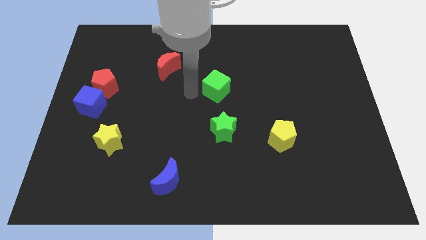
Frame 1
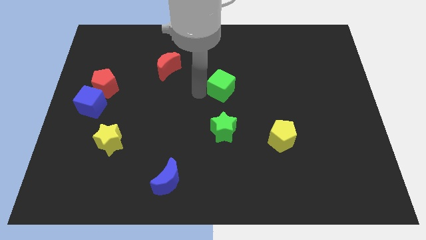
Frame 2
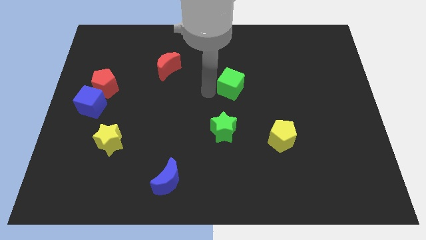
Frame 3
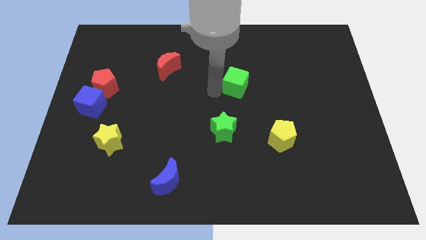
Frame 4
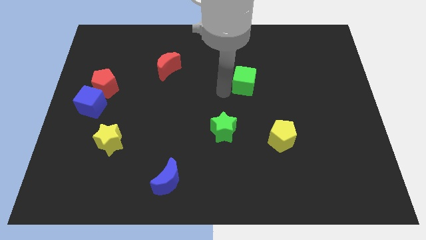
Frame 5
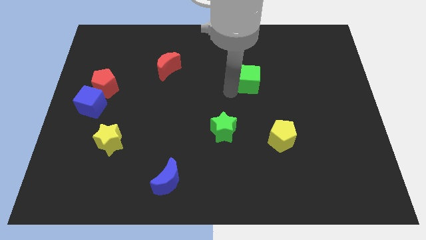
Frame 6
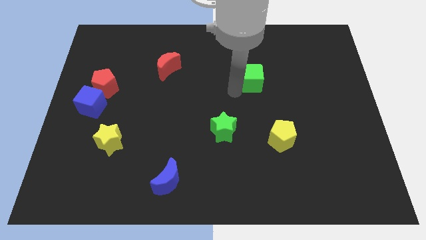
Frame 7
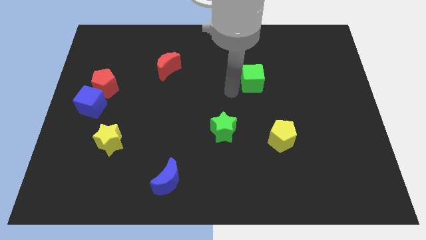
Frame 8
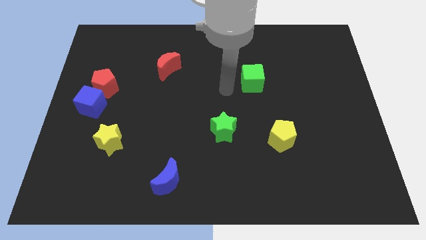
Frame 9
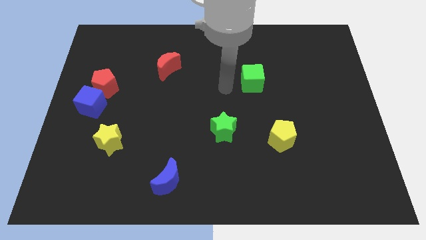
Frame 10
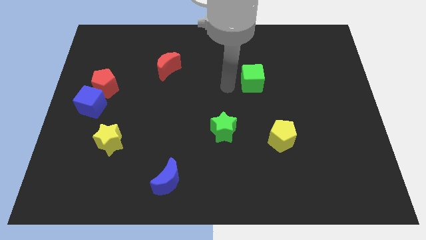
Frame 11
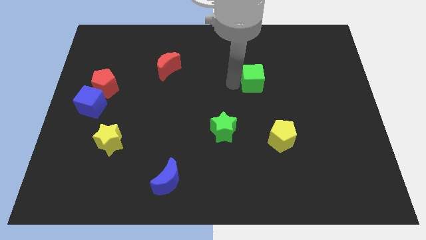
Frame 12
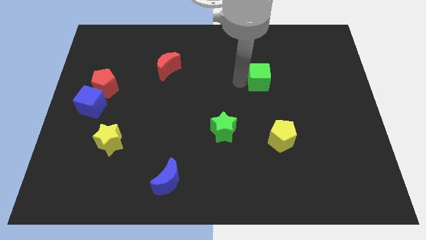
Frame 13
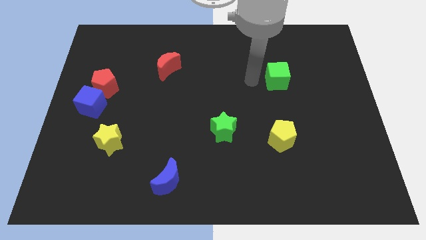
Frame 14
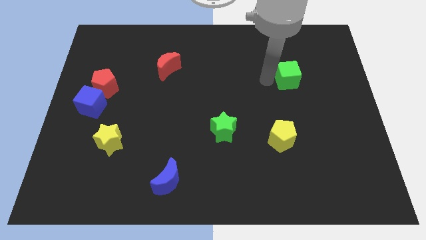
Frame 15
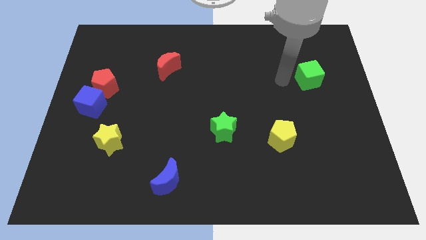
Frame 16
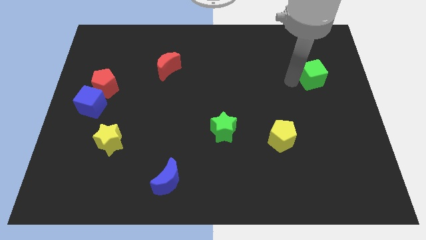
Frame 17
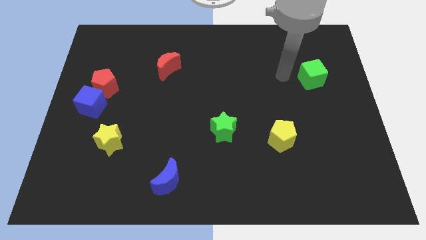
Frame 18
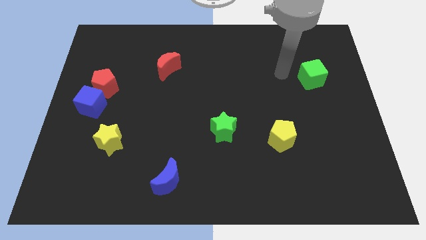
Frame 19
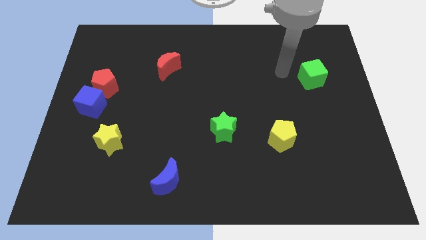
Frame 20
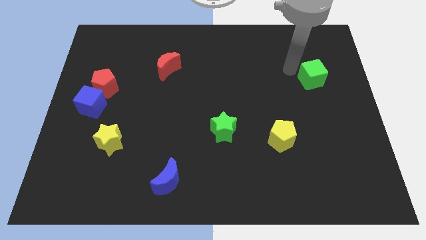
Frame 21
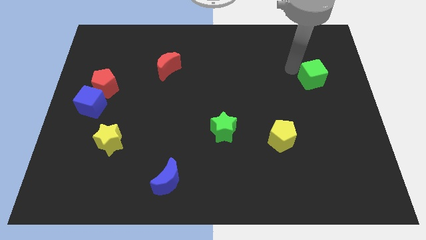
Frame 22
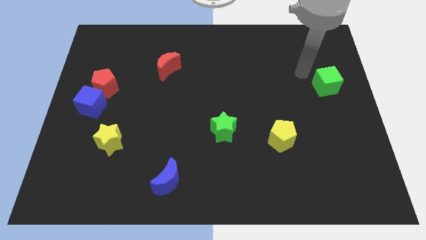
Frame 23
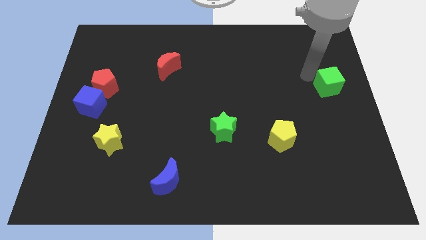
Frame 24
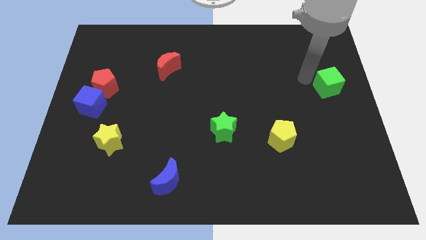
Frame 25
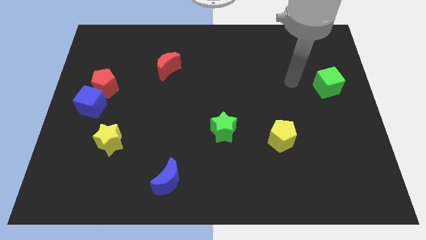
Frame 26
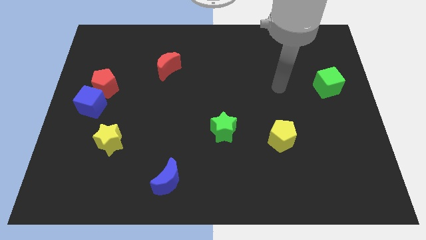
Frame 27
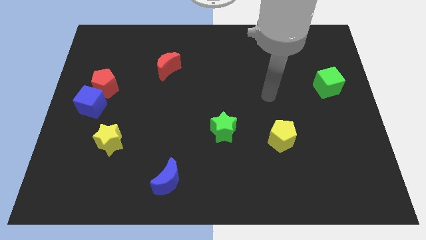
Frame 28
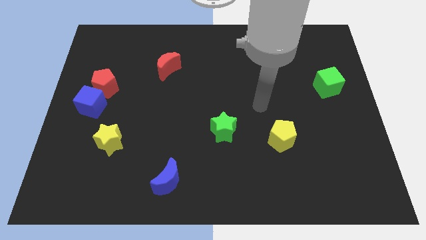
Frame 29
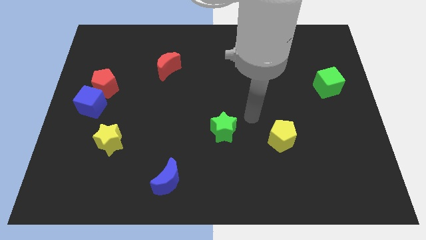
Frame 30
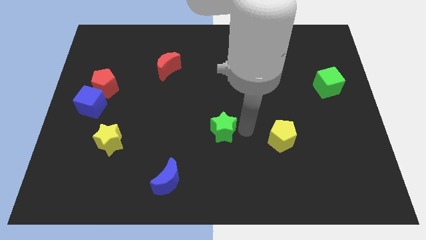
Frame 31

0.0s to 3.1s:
move the green cube to the top right of the yellow pentagon

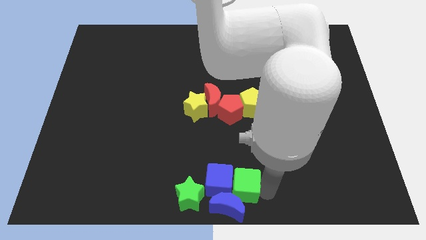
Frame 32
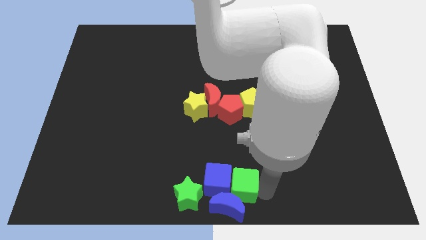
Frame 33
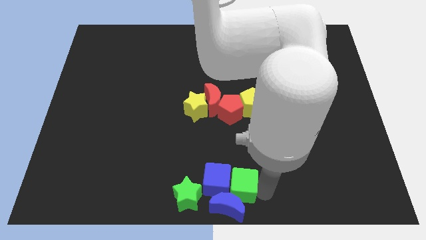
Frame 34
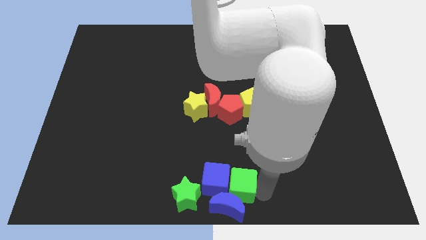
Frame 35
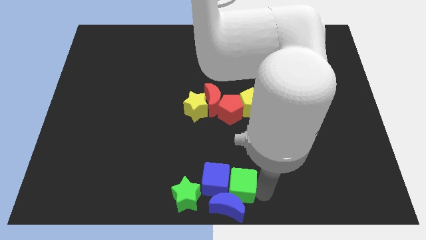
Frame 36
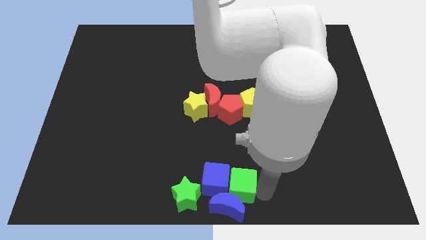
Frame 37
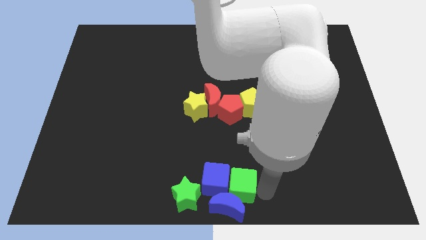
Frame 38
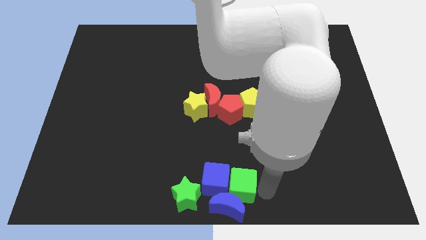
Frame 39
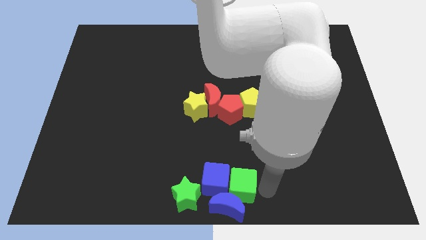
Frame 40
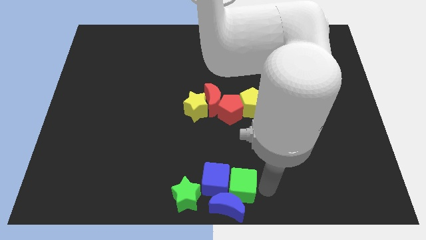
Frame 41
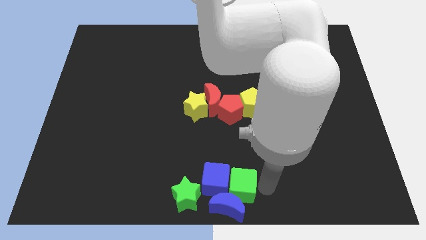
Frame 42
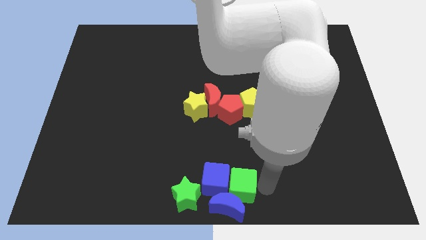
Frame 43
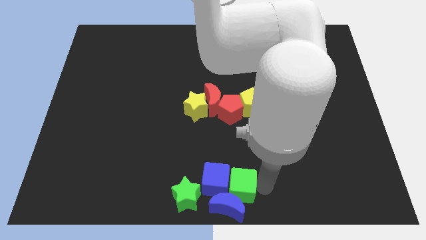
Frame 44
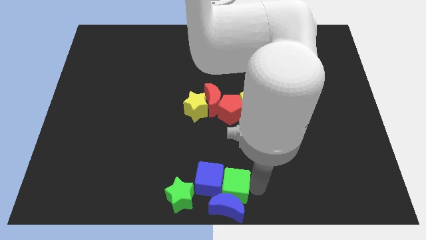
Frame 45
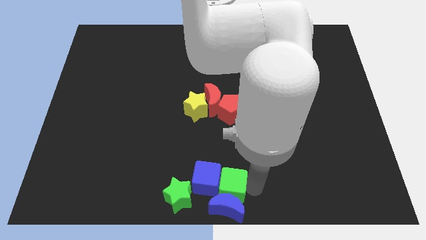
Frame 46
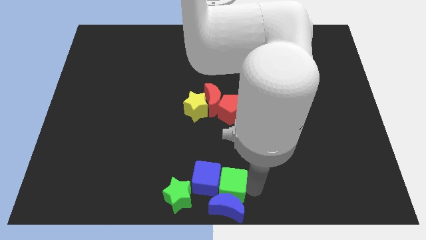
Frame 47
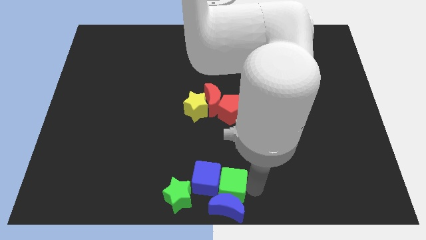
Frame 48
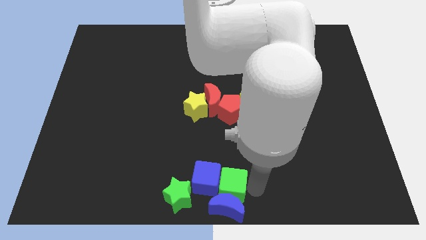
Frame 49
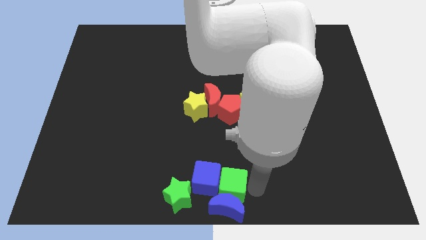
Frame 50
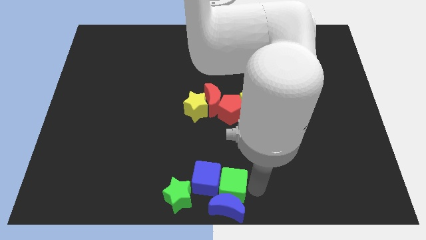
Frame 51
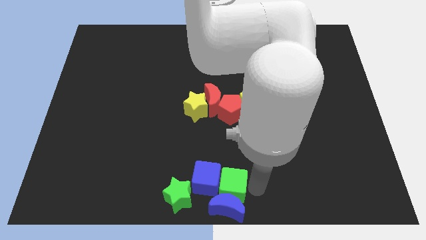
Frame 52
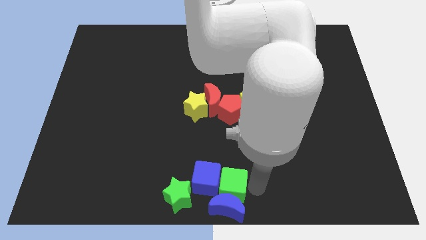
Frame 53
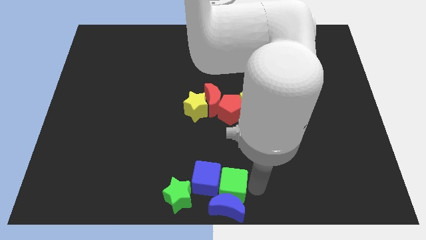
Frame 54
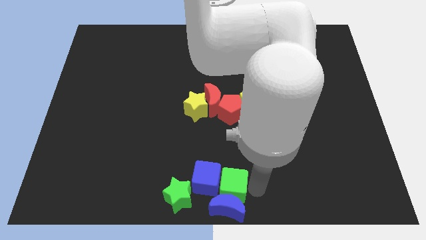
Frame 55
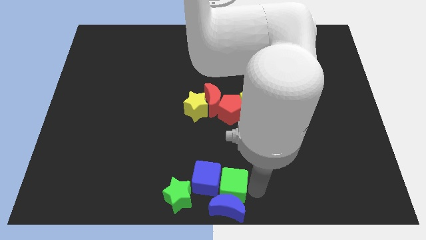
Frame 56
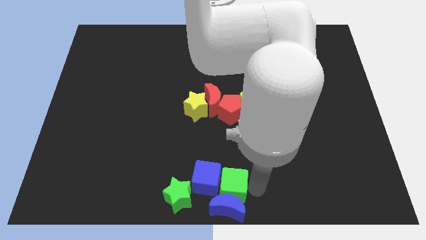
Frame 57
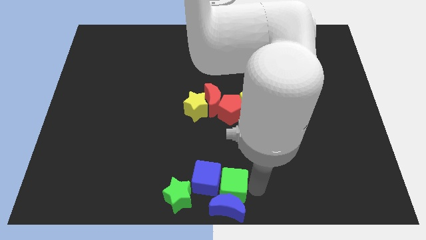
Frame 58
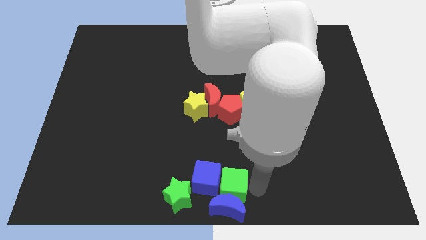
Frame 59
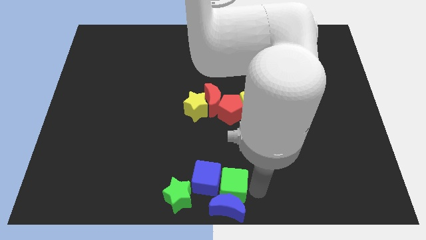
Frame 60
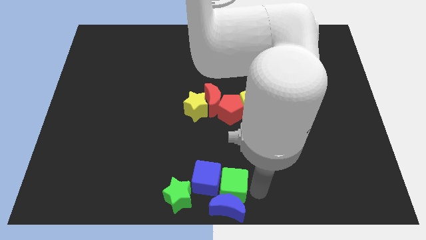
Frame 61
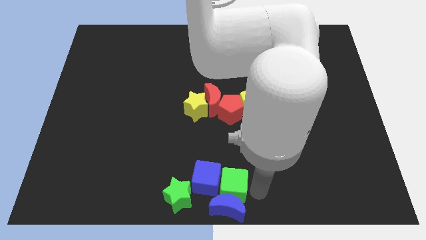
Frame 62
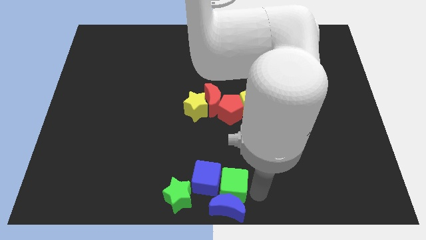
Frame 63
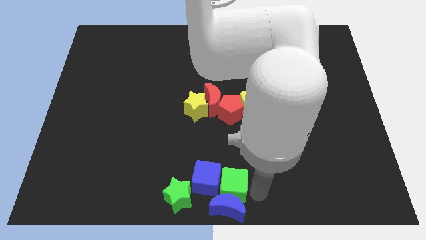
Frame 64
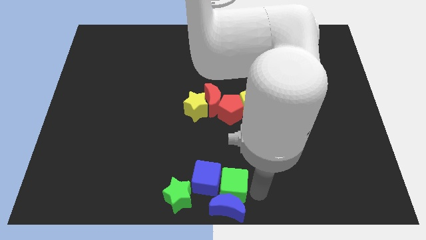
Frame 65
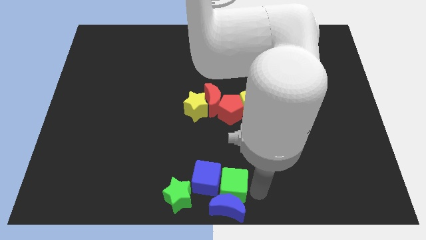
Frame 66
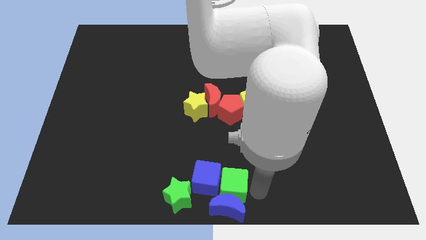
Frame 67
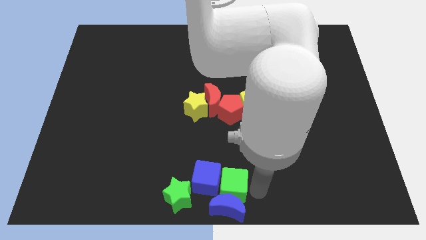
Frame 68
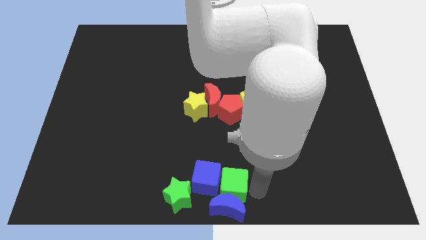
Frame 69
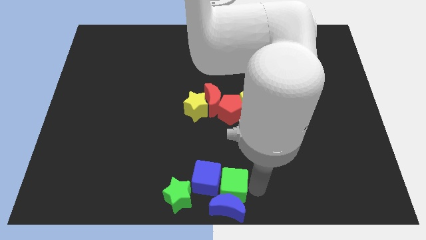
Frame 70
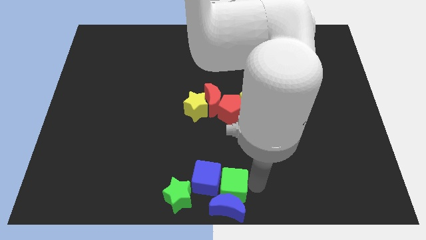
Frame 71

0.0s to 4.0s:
push green cube slightly to the center

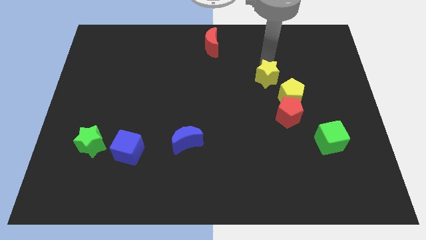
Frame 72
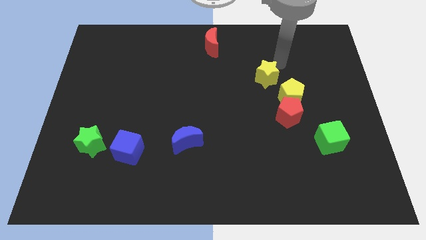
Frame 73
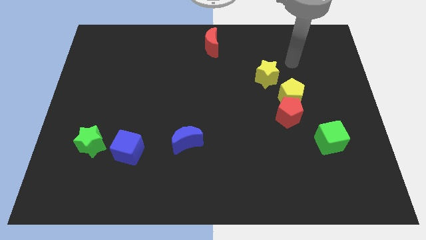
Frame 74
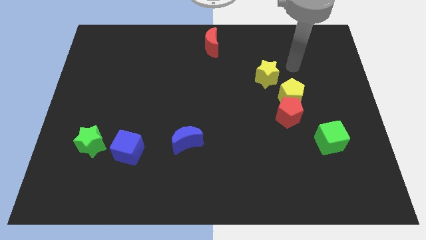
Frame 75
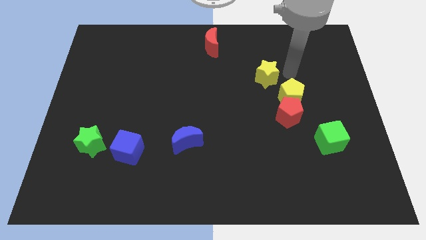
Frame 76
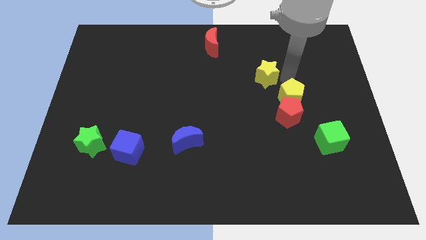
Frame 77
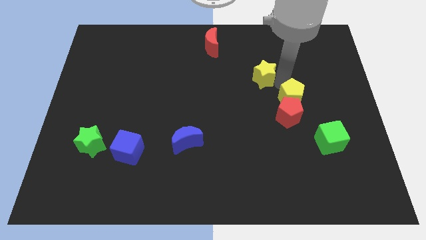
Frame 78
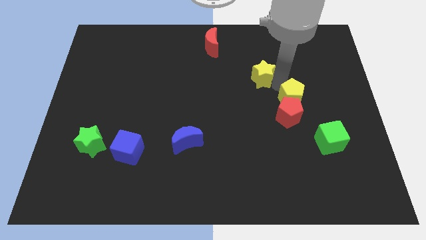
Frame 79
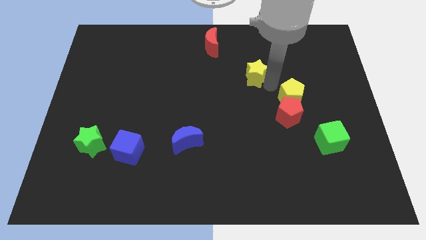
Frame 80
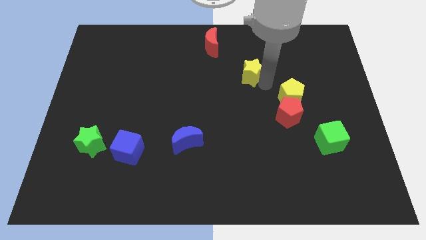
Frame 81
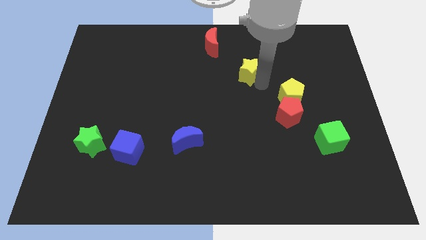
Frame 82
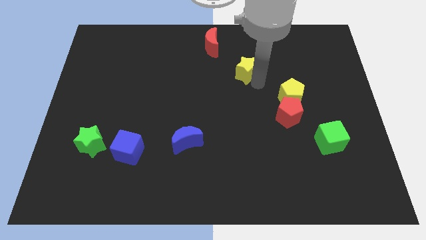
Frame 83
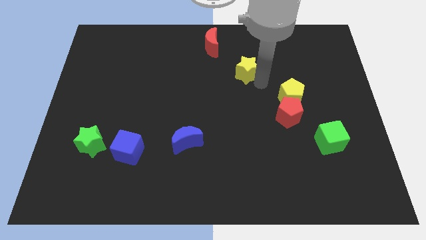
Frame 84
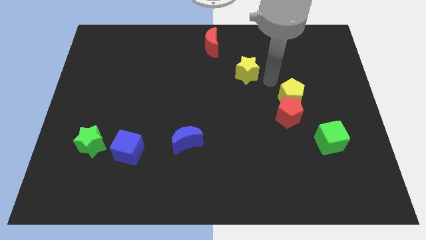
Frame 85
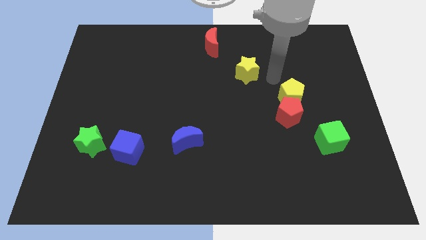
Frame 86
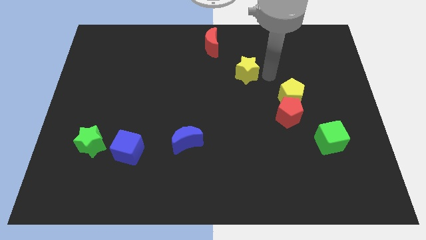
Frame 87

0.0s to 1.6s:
place the yellow star diagonally in between the yellow pentagon and red moon

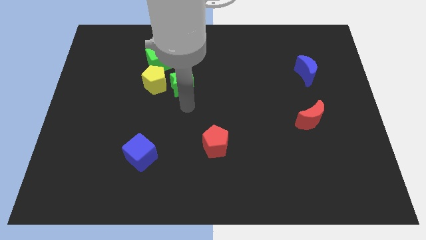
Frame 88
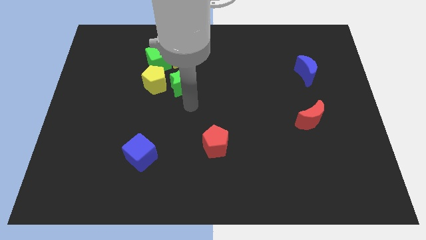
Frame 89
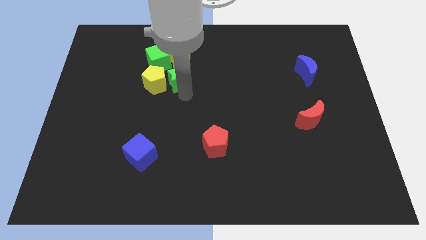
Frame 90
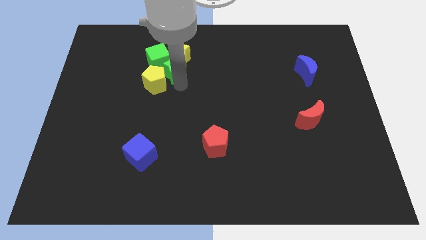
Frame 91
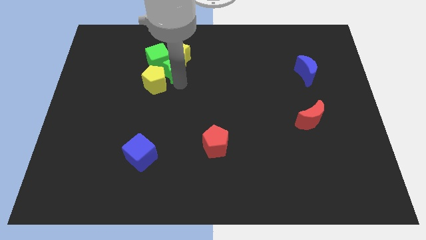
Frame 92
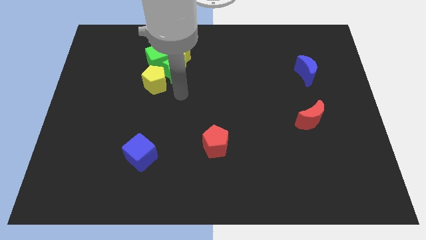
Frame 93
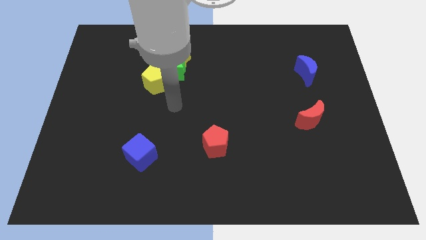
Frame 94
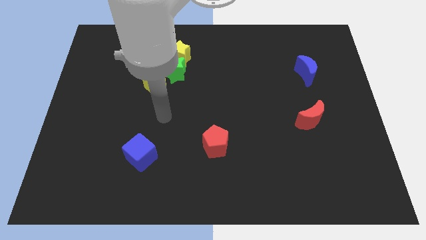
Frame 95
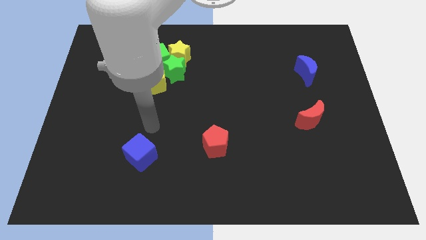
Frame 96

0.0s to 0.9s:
push the green star into the bottom right of the green cube
